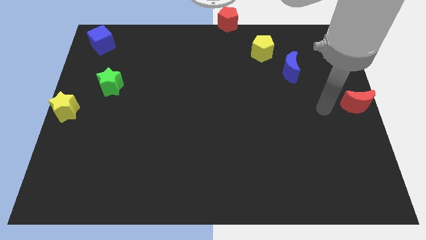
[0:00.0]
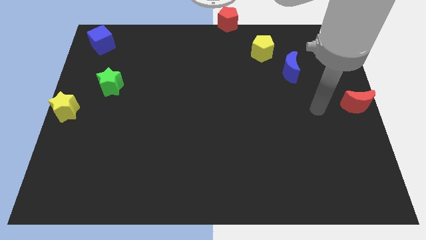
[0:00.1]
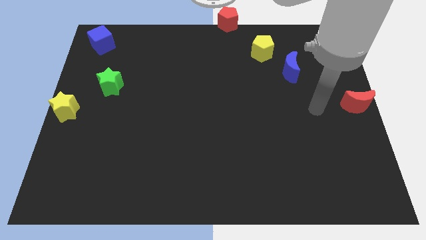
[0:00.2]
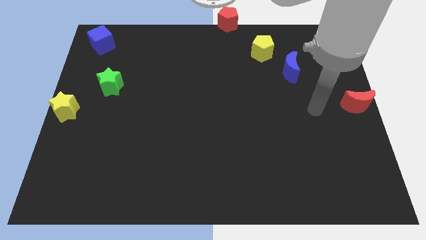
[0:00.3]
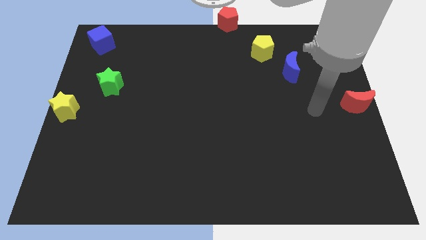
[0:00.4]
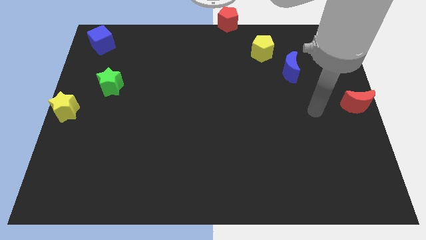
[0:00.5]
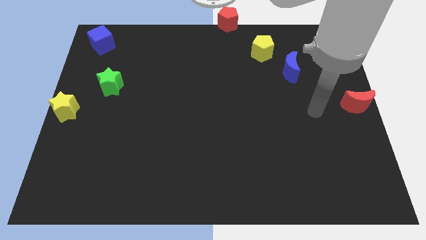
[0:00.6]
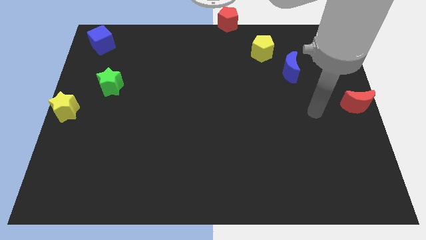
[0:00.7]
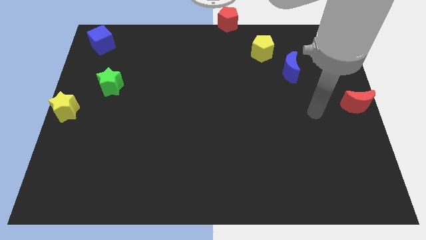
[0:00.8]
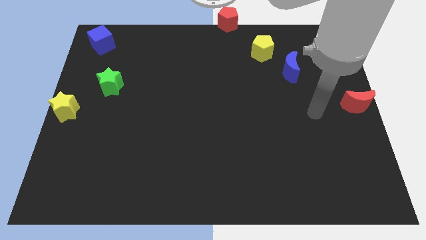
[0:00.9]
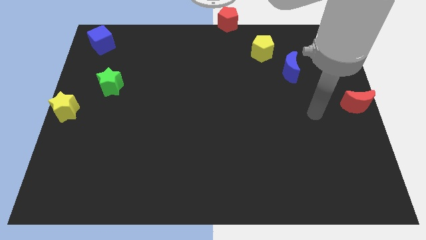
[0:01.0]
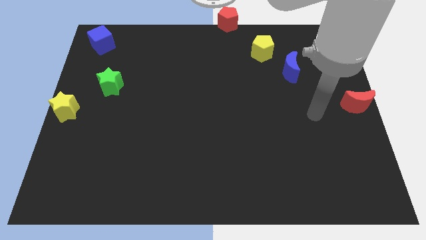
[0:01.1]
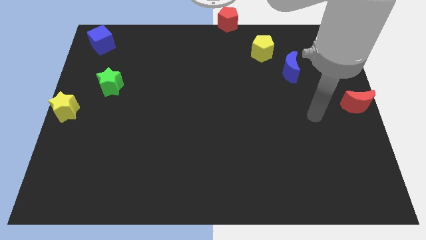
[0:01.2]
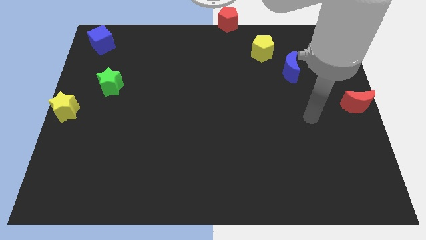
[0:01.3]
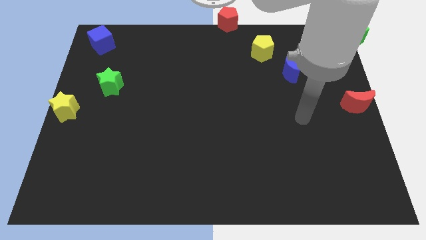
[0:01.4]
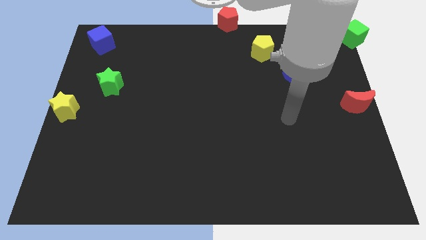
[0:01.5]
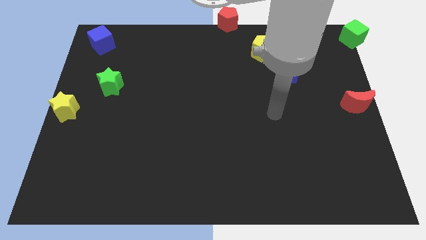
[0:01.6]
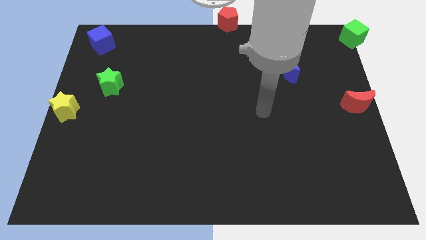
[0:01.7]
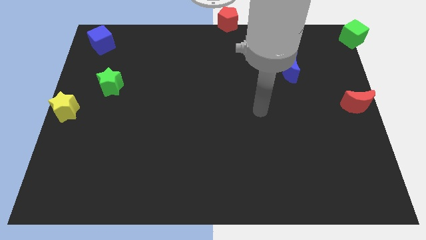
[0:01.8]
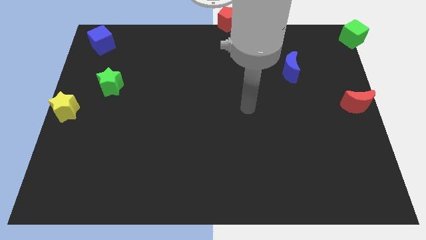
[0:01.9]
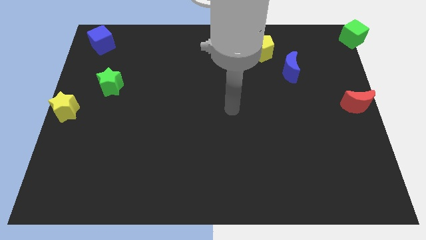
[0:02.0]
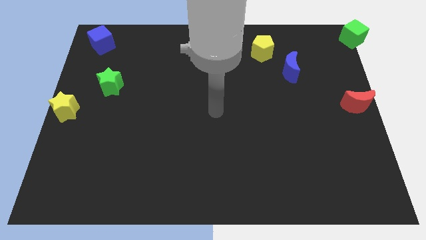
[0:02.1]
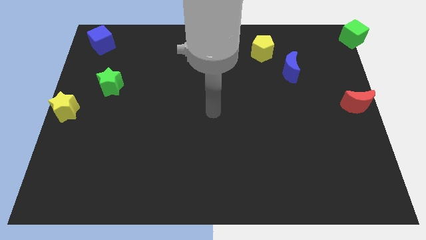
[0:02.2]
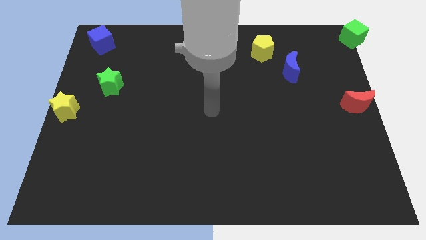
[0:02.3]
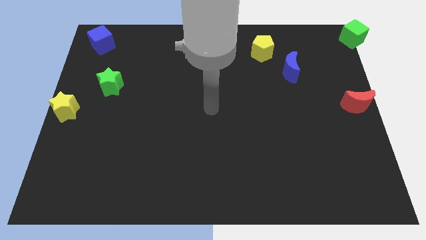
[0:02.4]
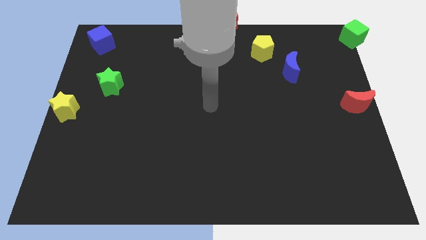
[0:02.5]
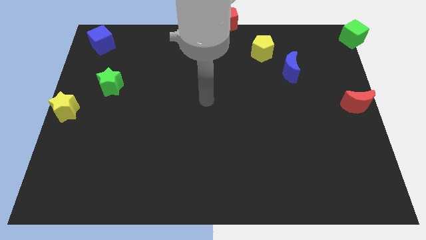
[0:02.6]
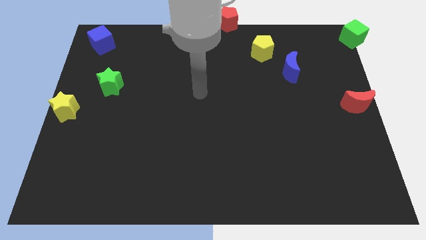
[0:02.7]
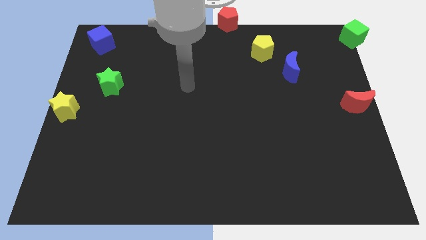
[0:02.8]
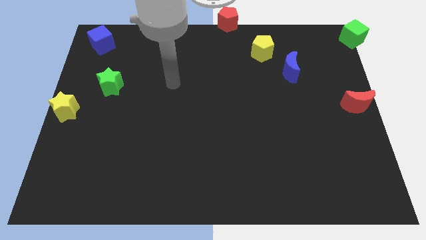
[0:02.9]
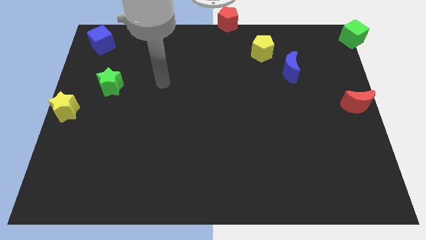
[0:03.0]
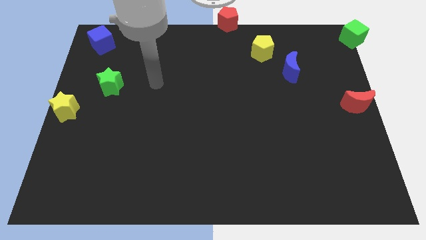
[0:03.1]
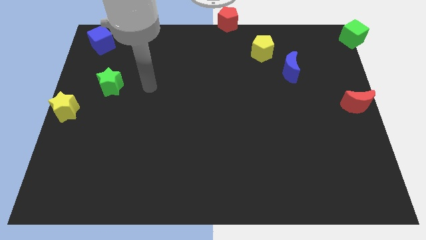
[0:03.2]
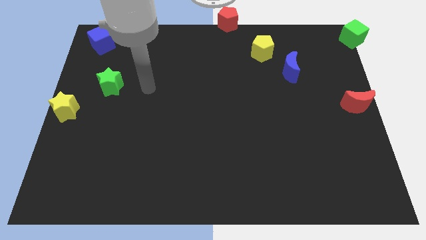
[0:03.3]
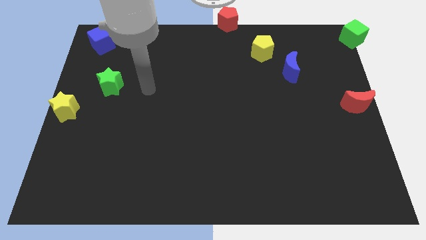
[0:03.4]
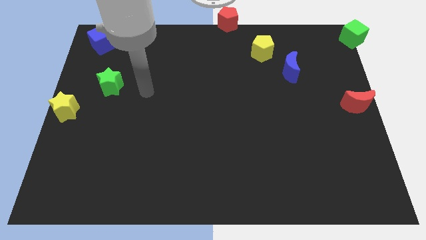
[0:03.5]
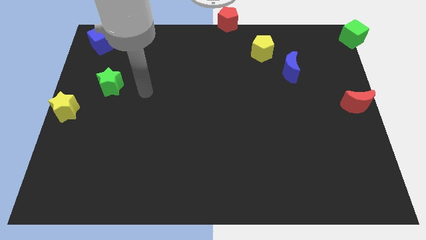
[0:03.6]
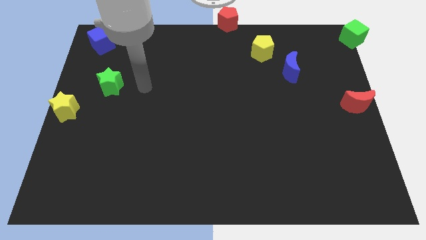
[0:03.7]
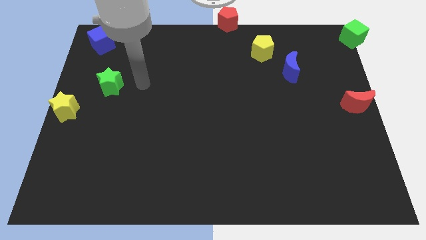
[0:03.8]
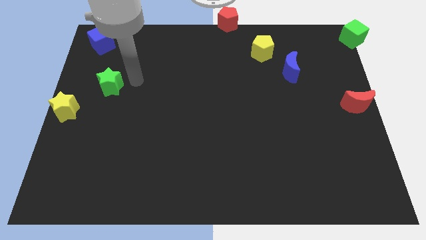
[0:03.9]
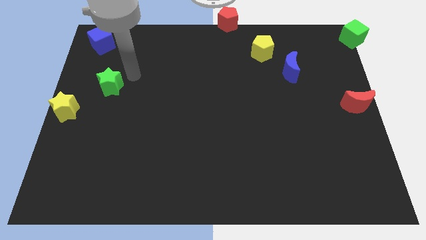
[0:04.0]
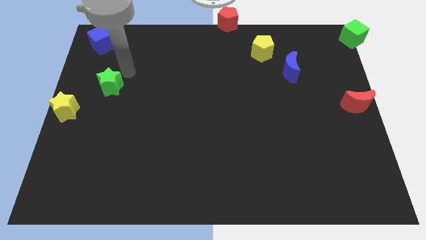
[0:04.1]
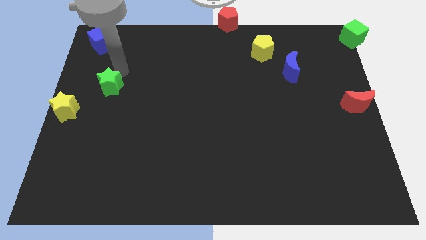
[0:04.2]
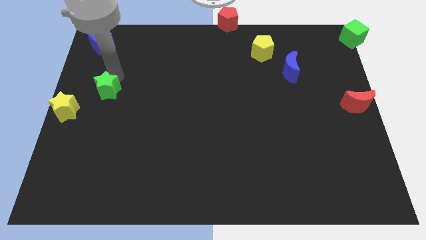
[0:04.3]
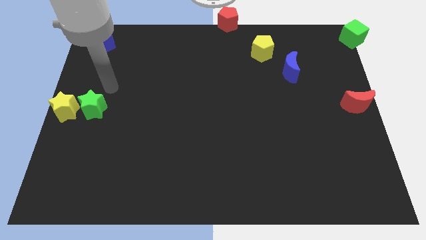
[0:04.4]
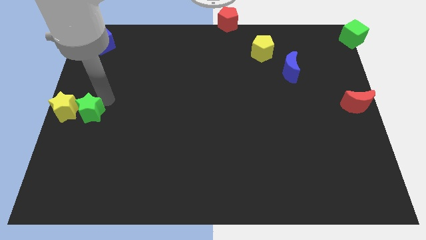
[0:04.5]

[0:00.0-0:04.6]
move the green star to the right of the yellow star

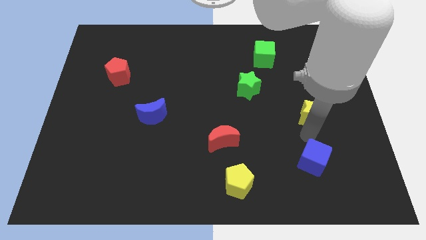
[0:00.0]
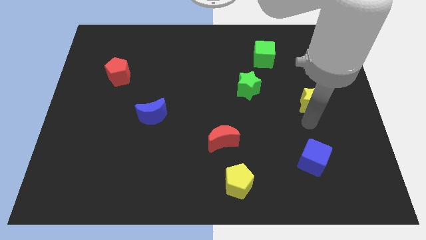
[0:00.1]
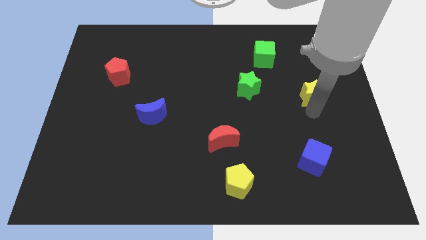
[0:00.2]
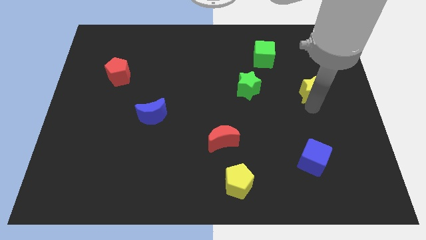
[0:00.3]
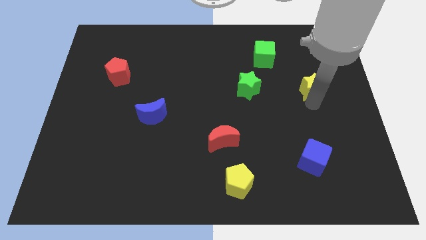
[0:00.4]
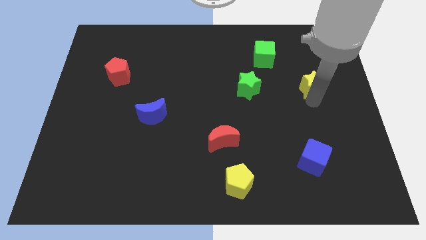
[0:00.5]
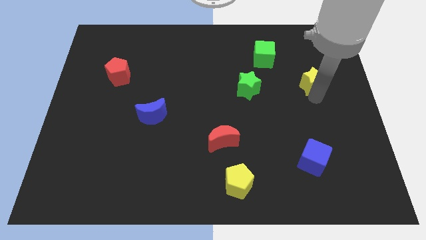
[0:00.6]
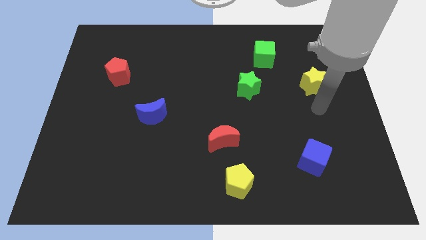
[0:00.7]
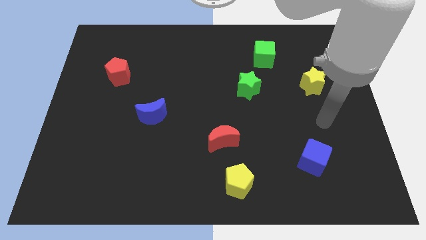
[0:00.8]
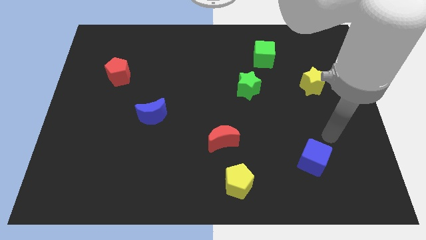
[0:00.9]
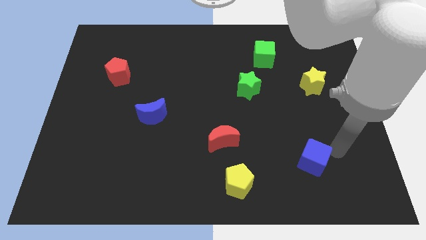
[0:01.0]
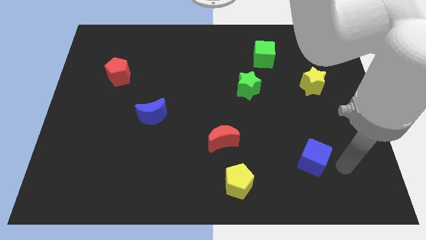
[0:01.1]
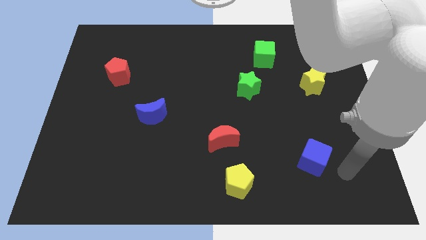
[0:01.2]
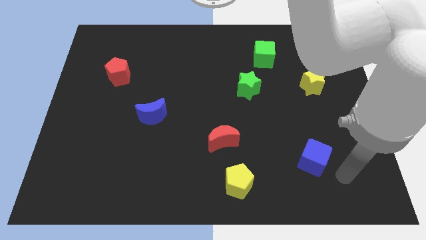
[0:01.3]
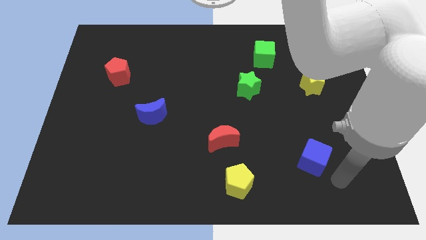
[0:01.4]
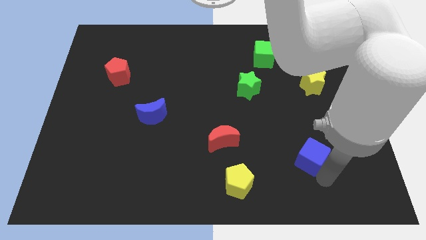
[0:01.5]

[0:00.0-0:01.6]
drag the yellow star towards the top

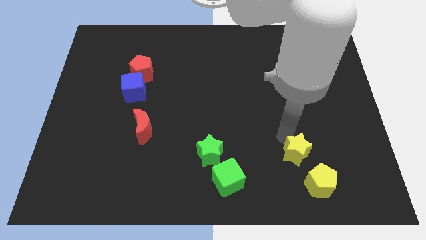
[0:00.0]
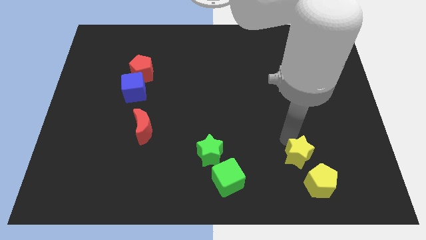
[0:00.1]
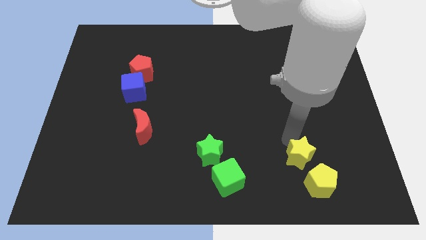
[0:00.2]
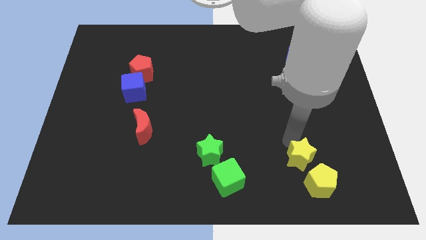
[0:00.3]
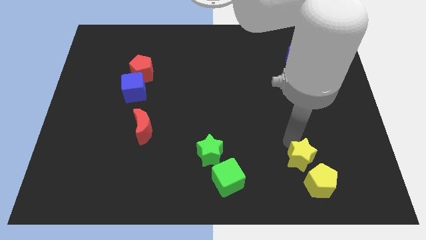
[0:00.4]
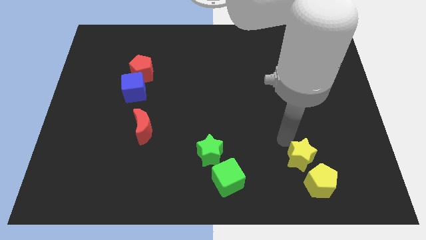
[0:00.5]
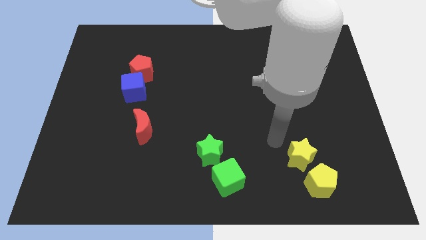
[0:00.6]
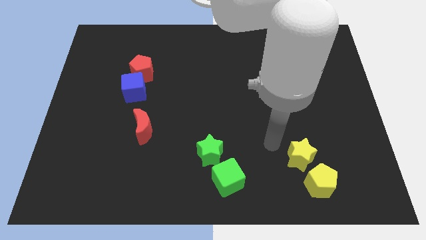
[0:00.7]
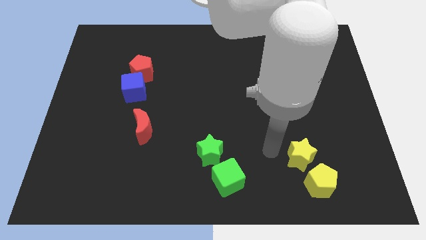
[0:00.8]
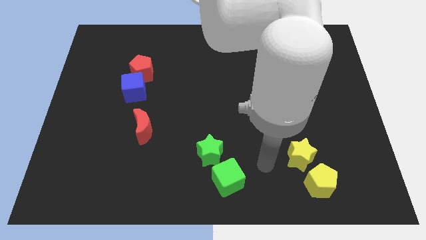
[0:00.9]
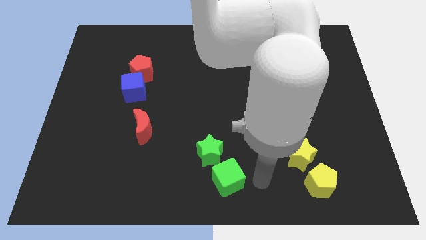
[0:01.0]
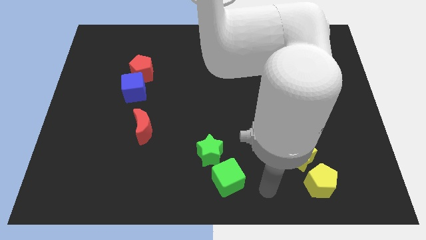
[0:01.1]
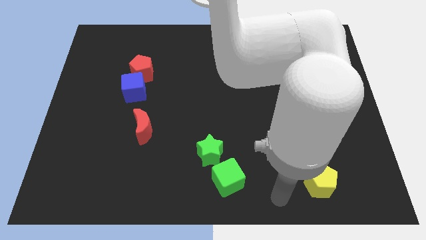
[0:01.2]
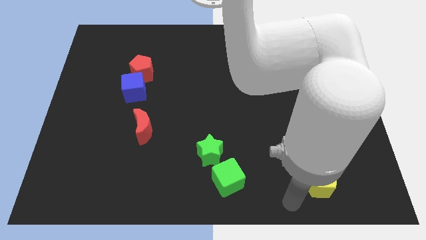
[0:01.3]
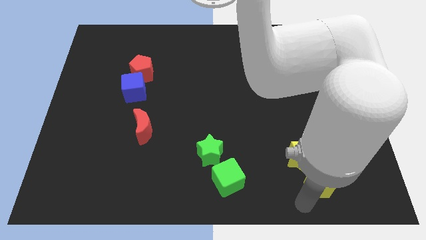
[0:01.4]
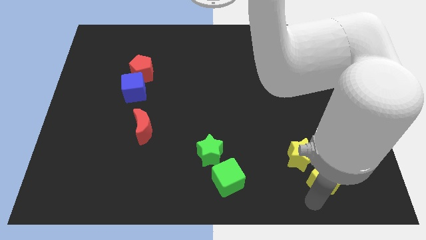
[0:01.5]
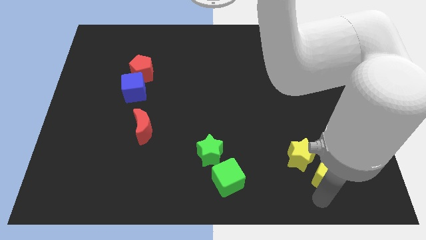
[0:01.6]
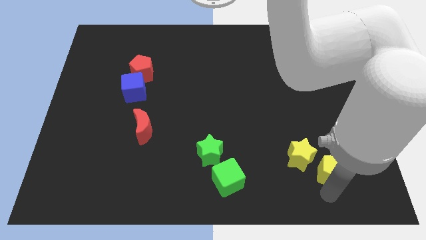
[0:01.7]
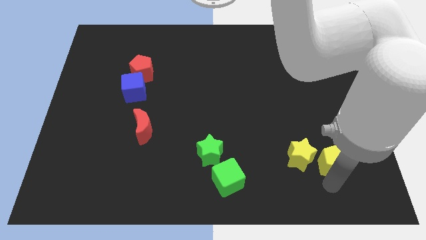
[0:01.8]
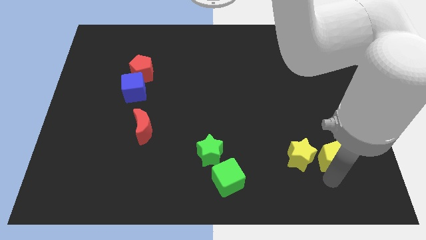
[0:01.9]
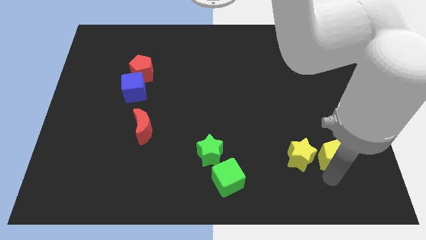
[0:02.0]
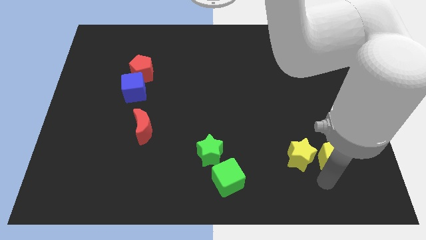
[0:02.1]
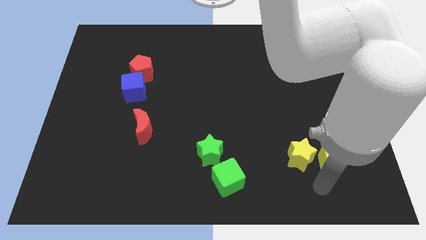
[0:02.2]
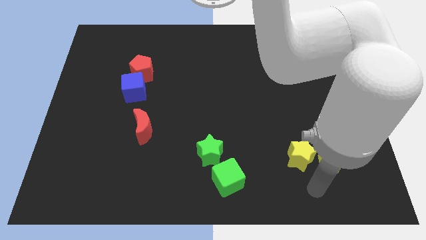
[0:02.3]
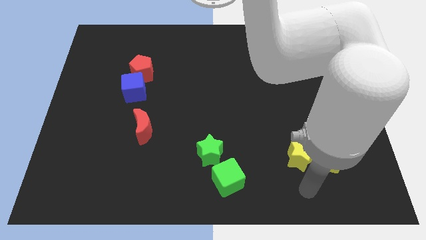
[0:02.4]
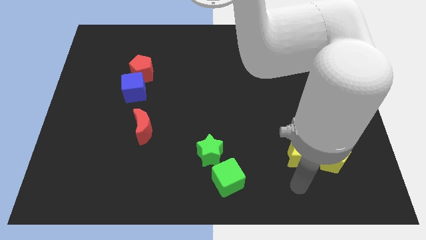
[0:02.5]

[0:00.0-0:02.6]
place yellow pentagon parallel to the right of the yellow star
